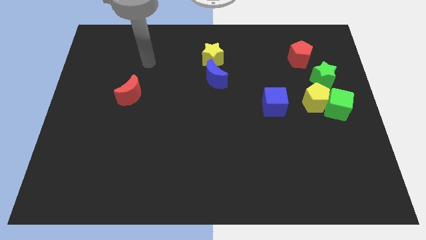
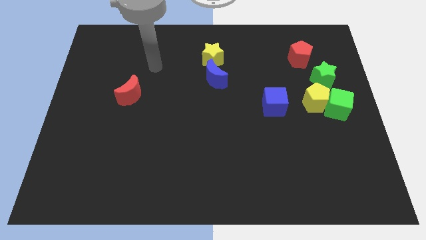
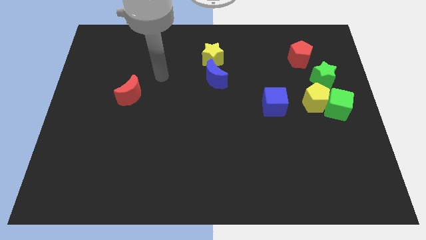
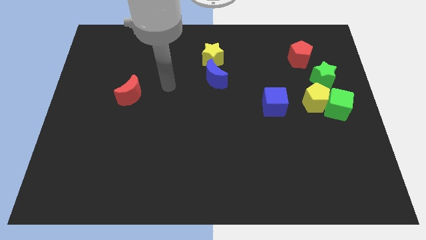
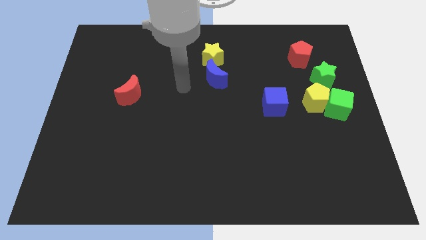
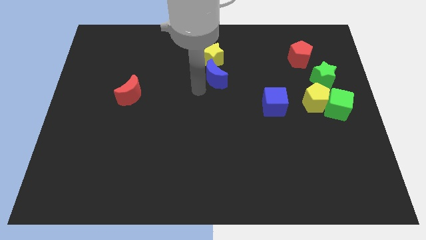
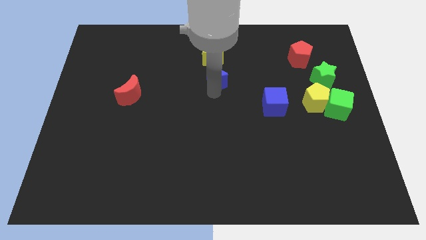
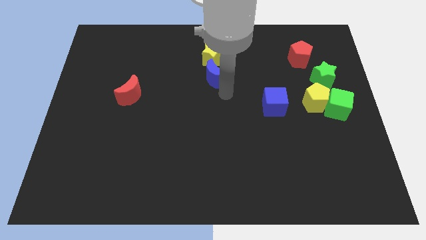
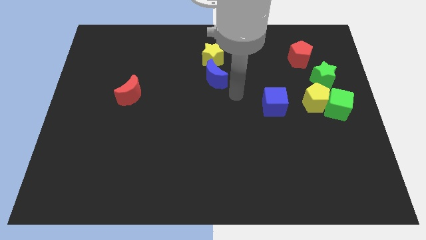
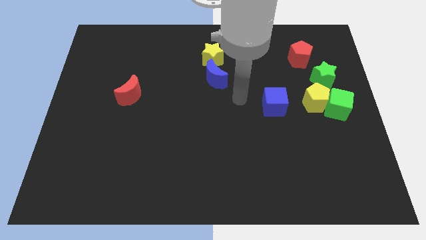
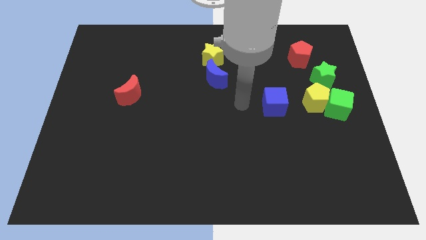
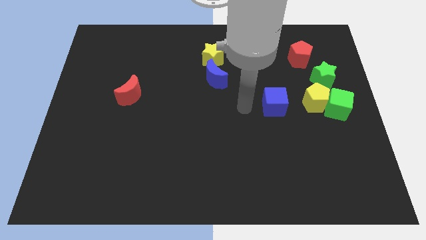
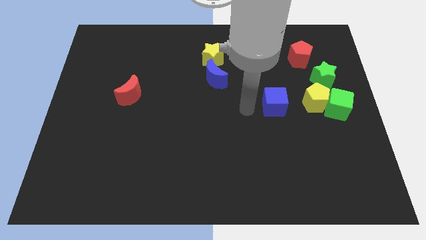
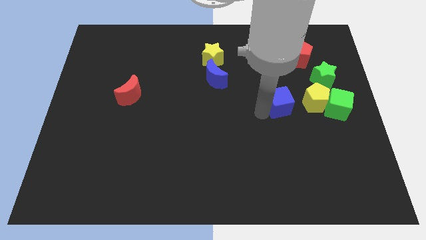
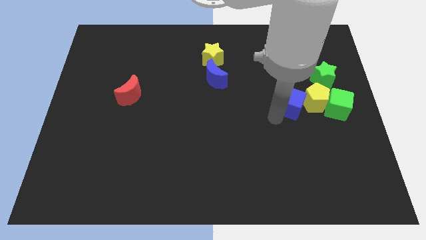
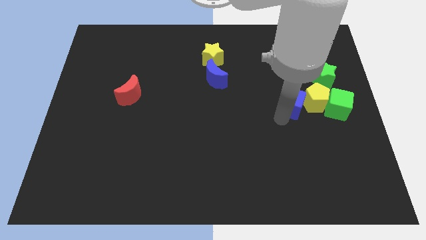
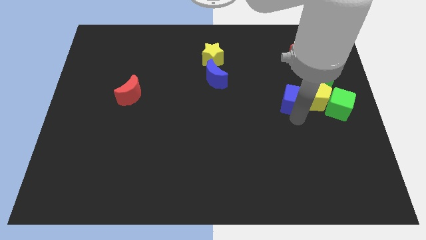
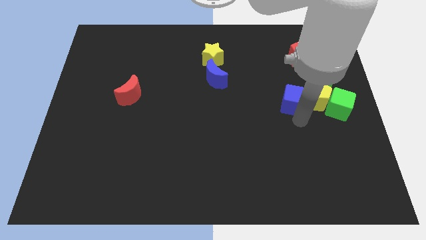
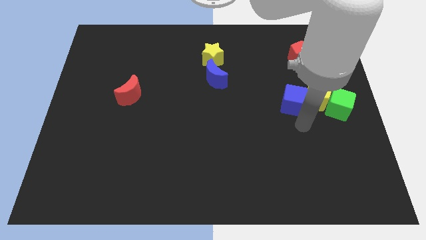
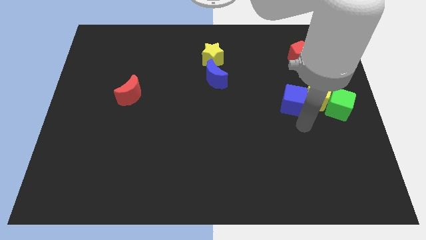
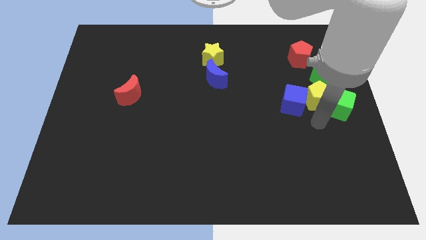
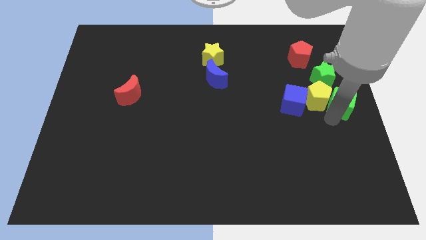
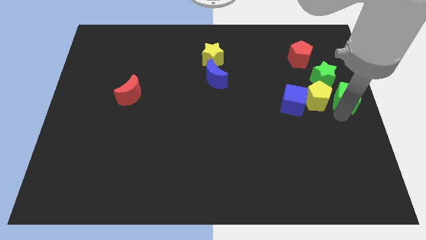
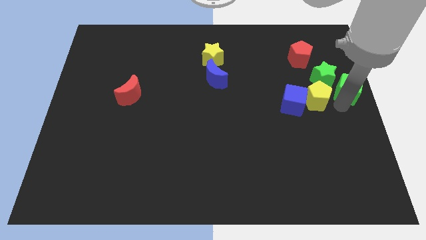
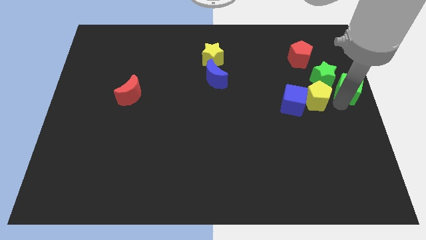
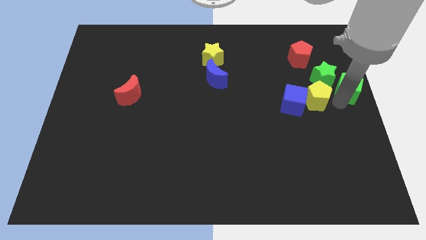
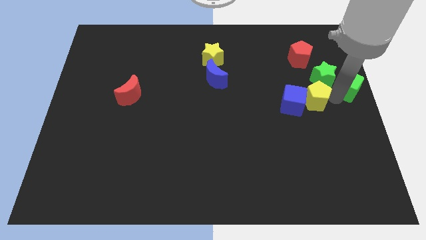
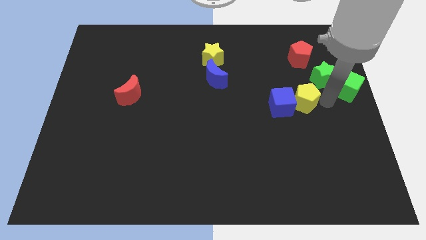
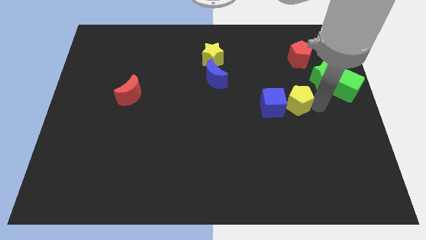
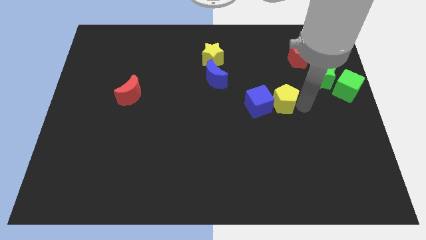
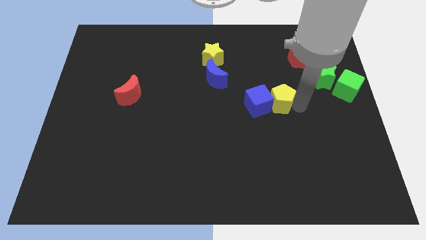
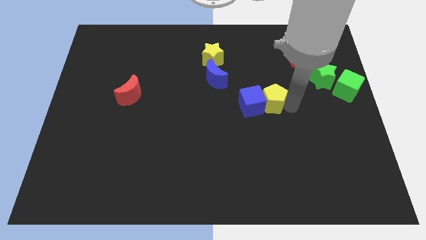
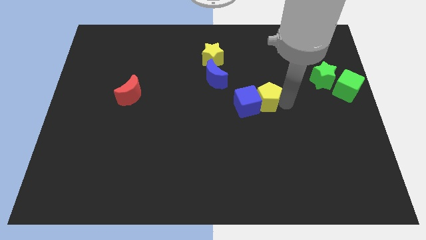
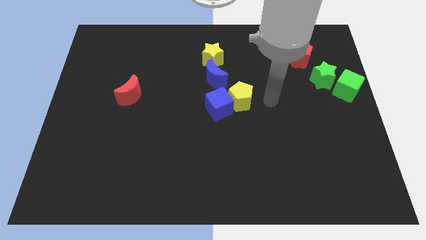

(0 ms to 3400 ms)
separate the green blocks from the blue cube and the yellow pentagon

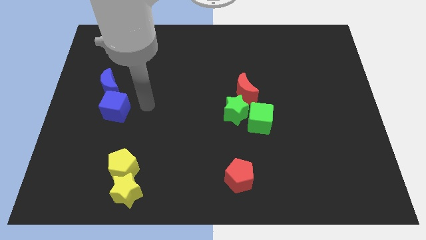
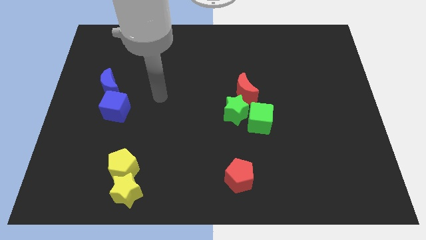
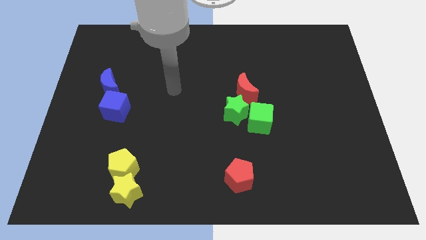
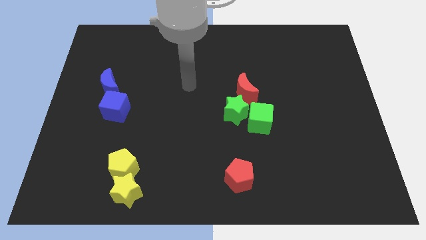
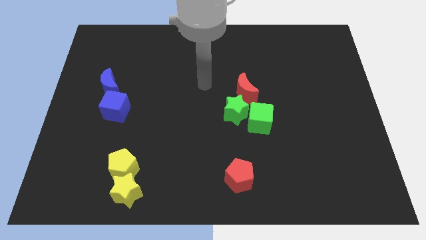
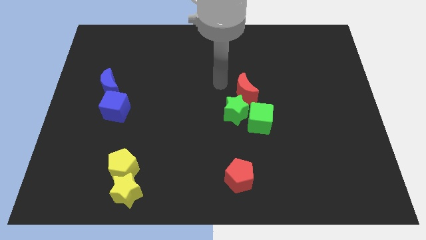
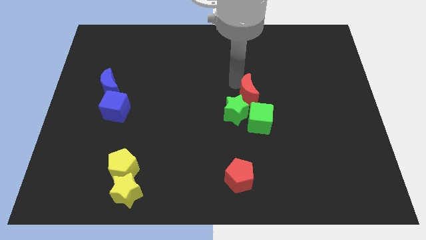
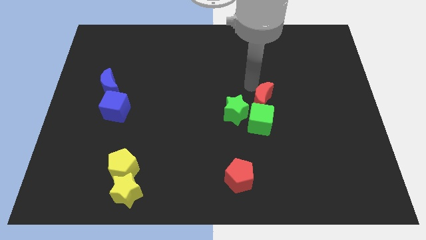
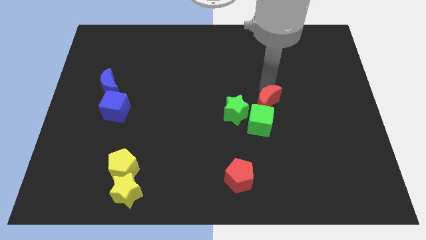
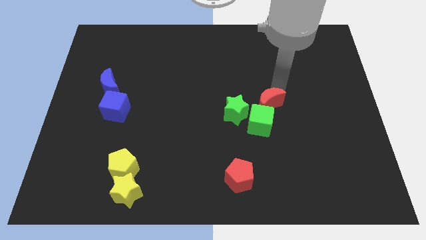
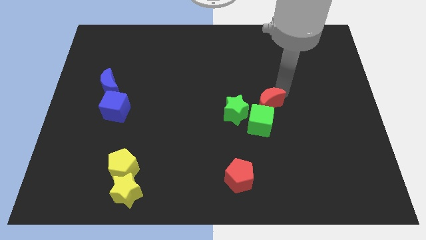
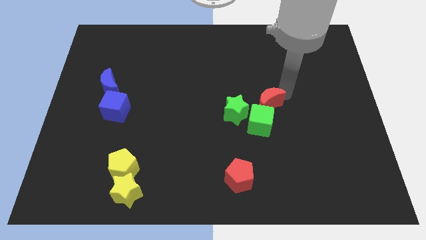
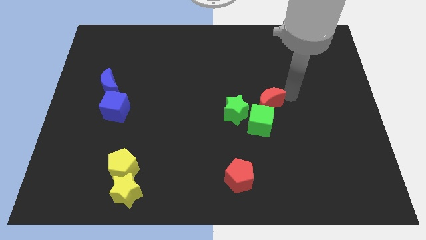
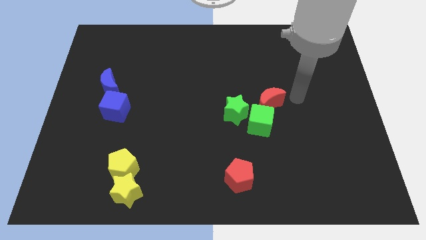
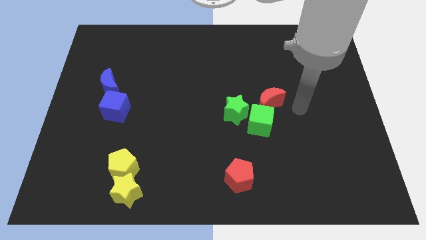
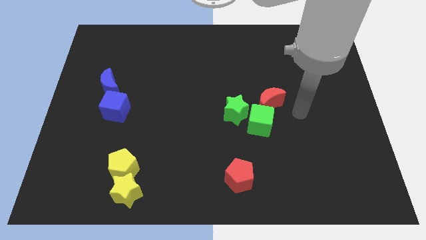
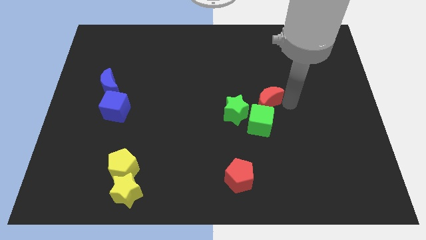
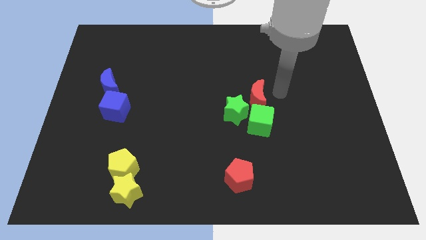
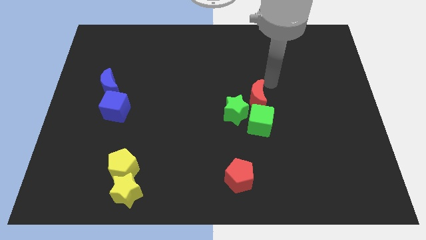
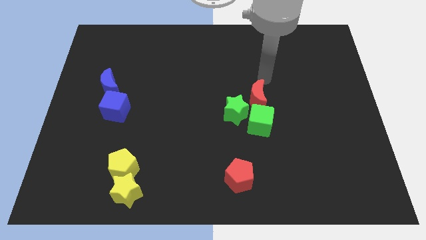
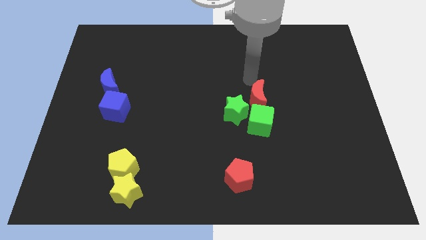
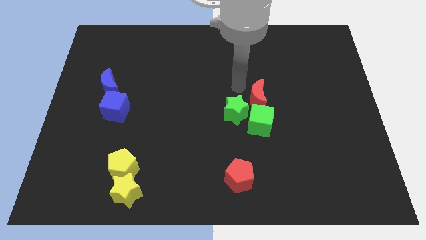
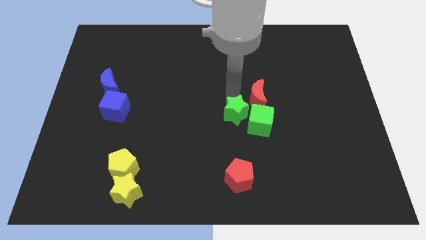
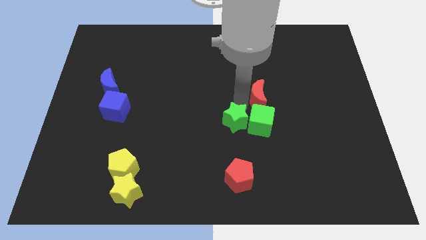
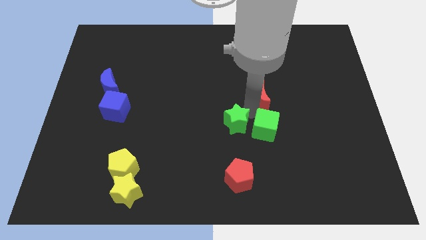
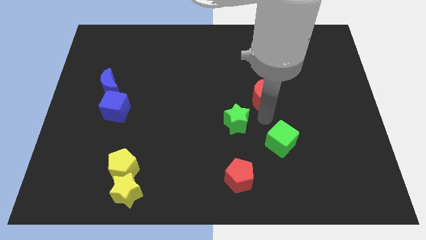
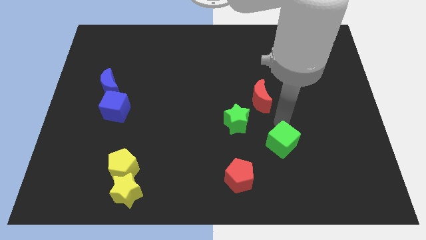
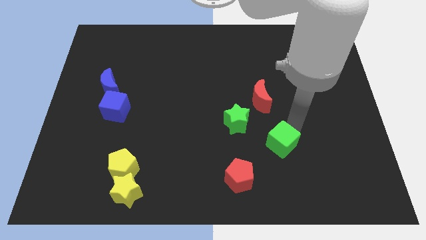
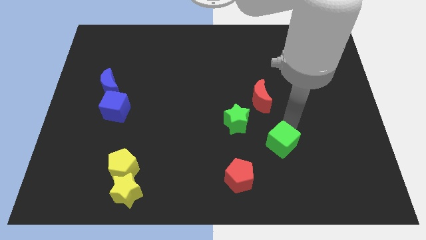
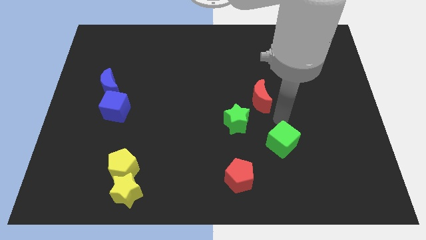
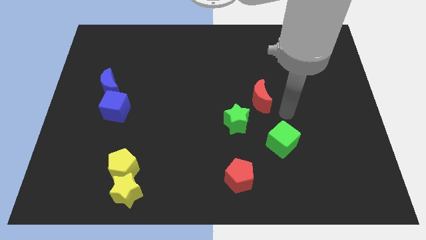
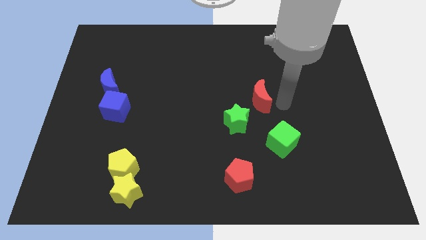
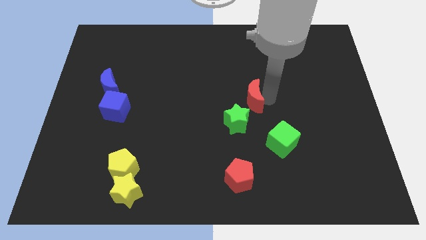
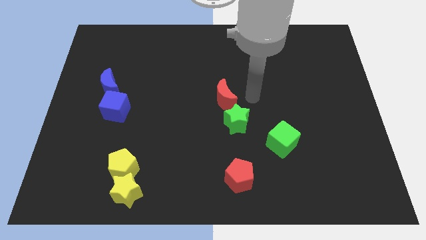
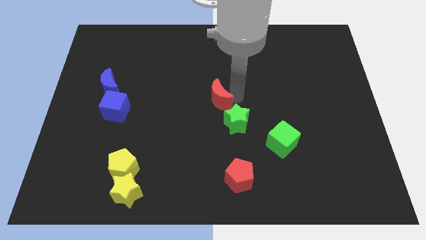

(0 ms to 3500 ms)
move the red moon towards green star

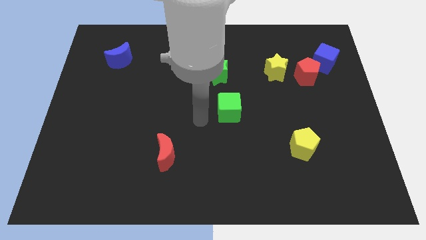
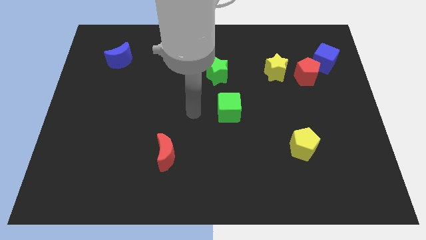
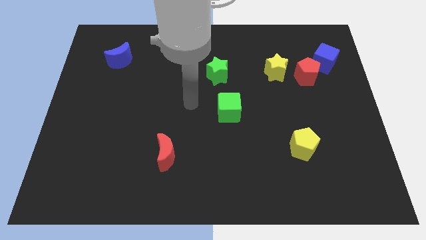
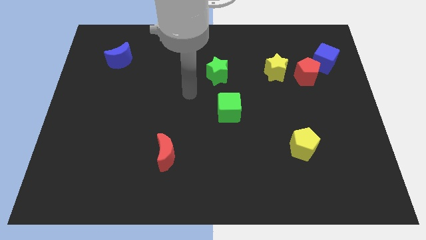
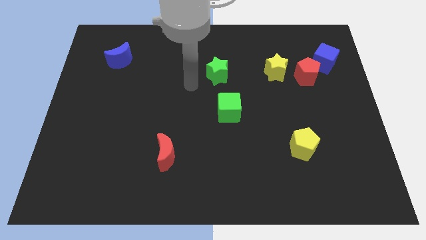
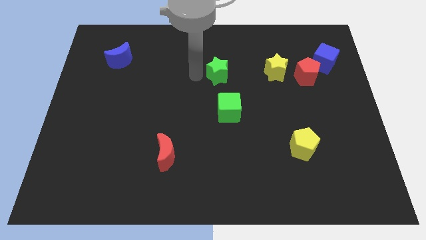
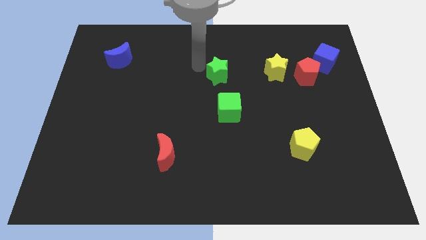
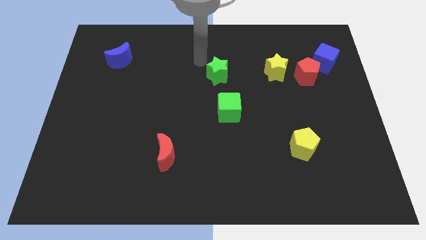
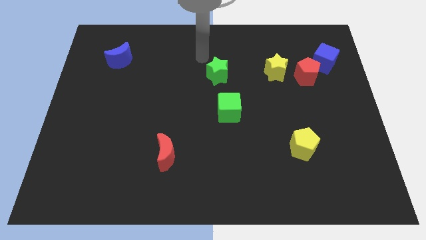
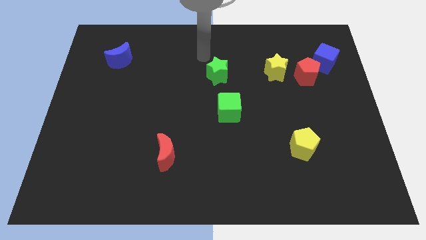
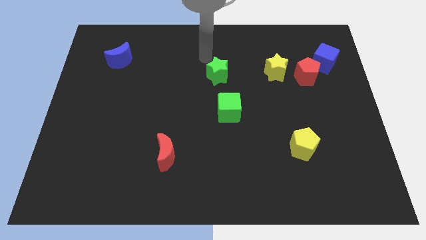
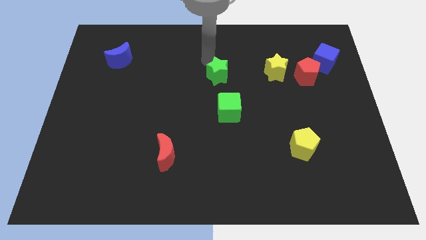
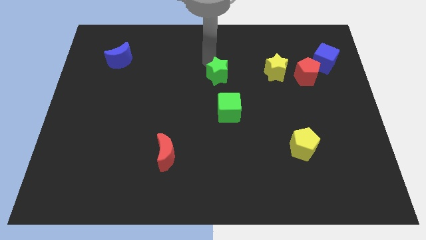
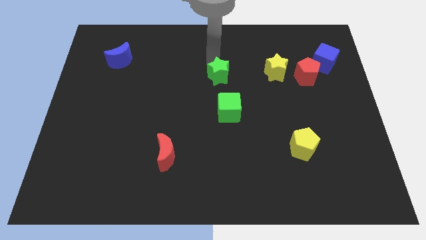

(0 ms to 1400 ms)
move your arm on the top side of the star

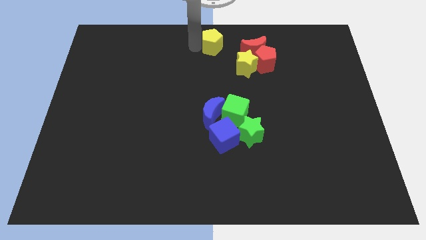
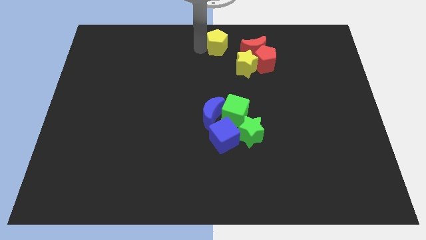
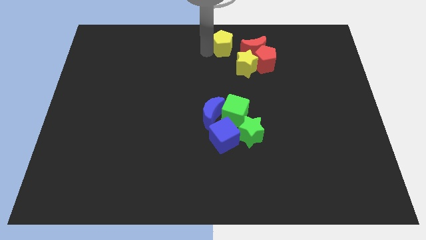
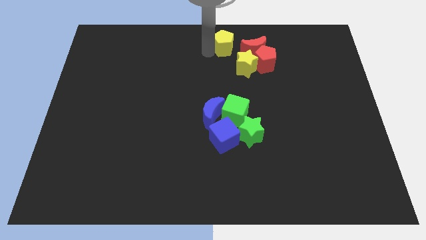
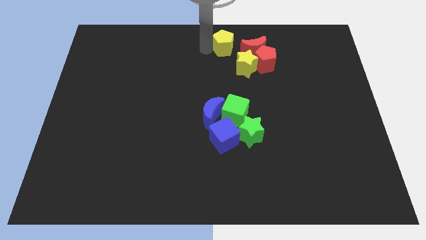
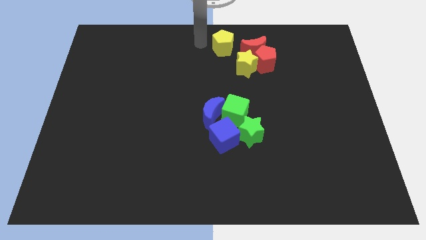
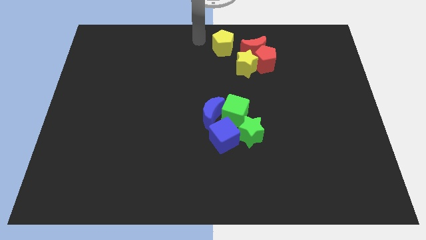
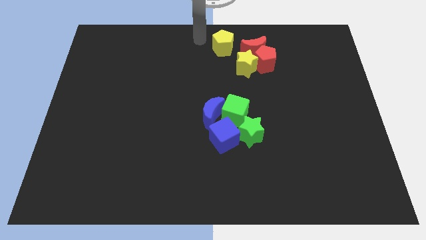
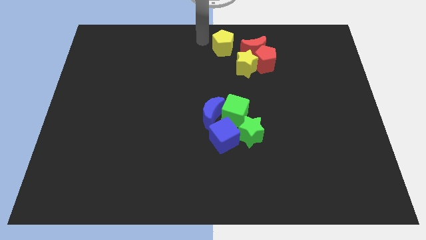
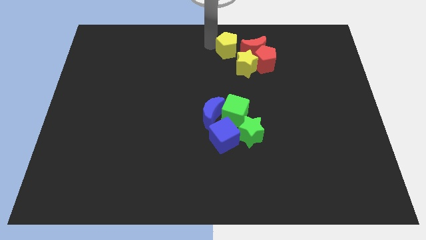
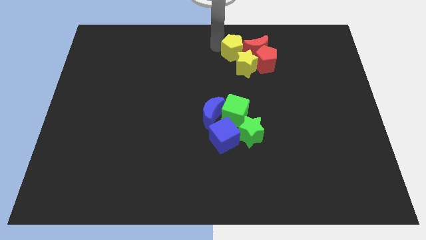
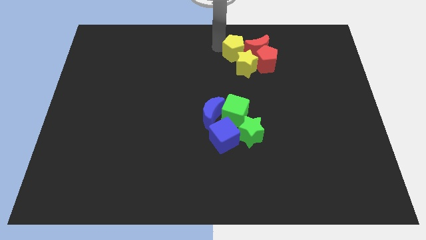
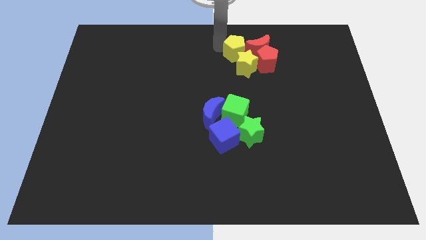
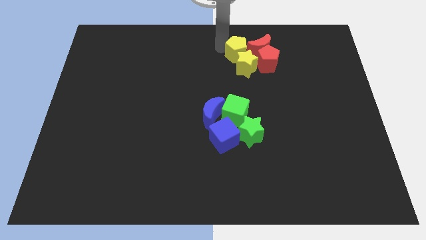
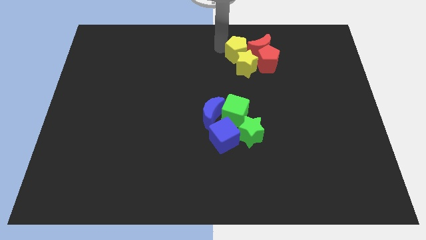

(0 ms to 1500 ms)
place the yellow pentagon to the left side of the red moon
